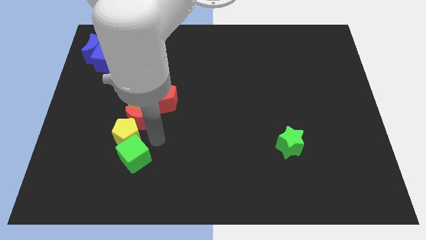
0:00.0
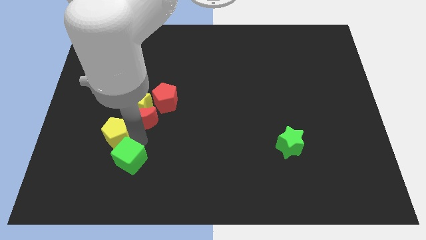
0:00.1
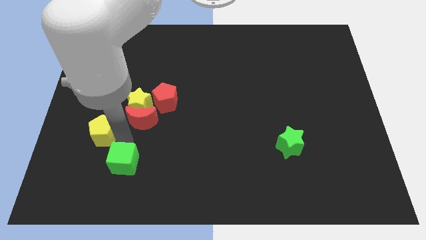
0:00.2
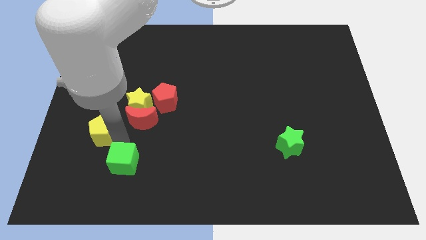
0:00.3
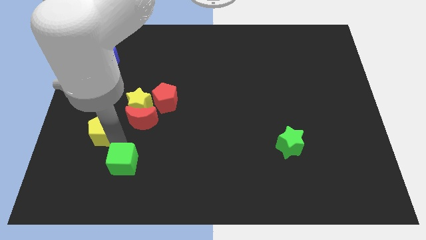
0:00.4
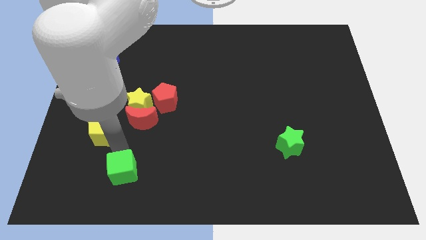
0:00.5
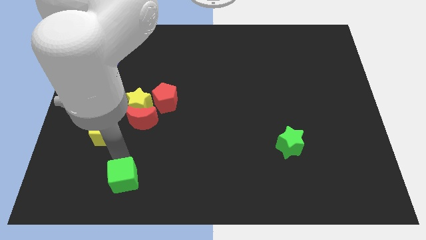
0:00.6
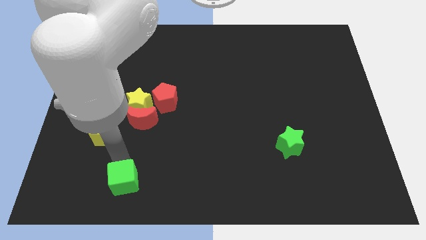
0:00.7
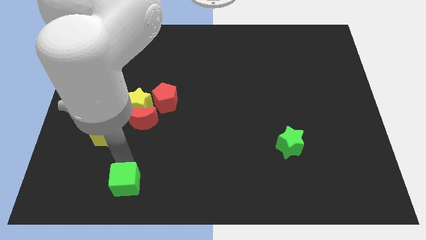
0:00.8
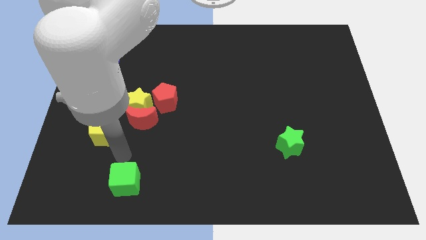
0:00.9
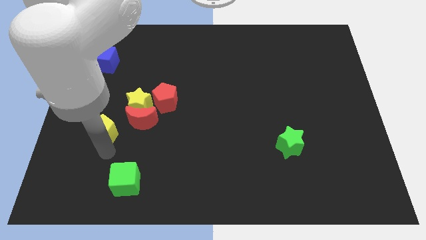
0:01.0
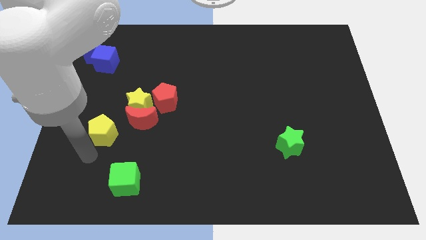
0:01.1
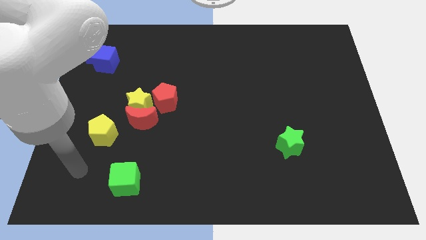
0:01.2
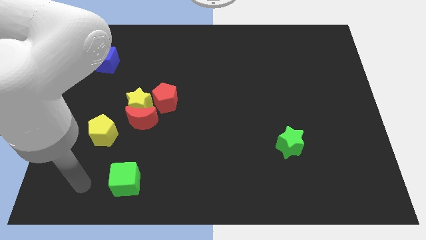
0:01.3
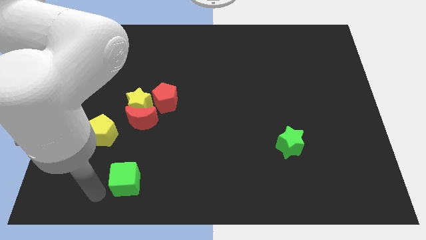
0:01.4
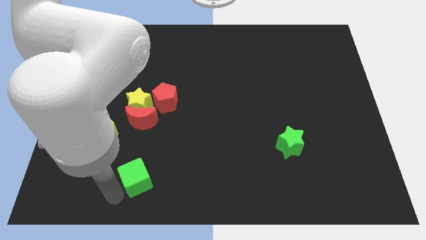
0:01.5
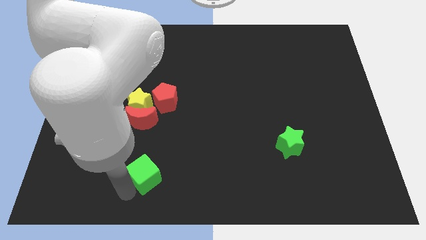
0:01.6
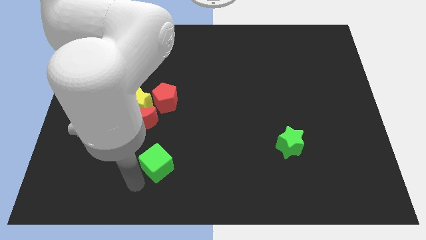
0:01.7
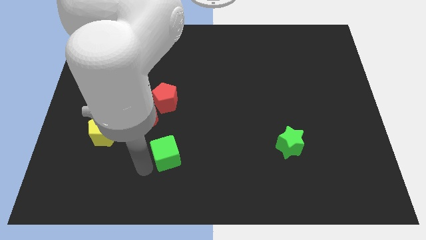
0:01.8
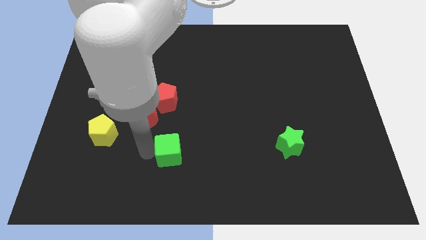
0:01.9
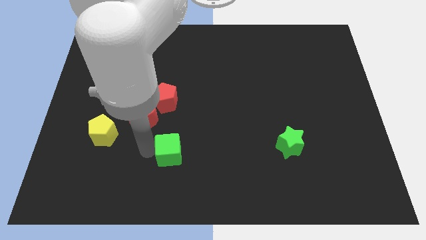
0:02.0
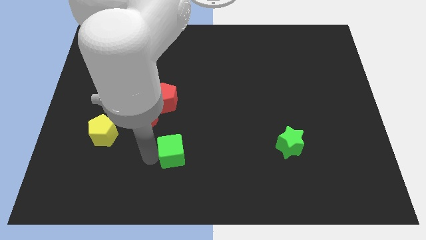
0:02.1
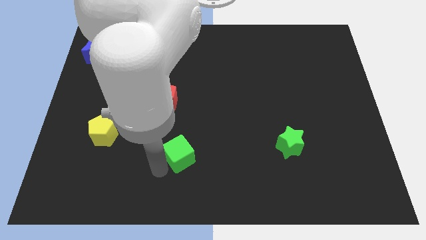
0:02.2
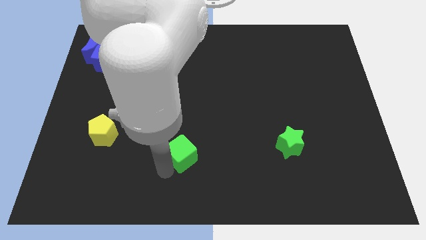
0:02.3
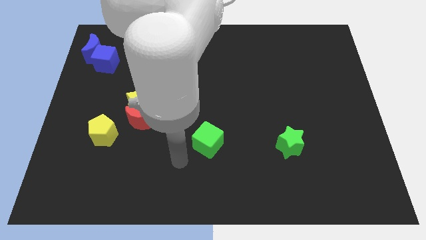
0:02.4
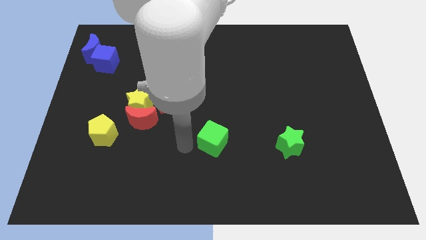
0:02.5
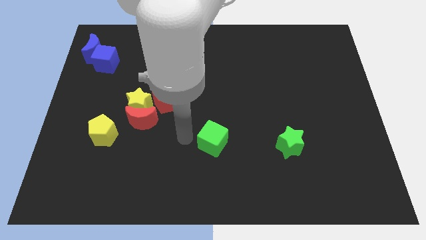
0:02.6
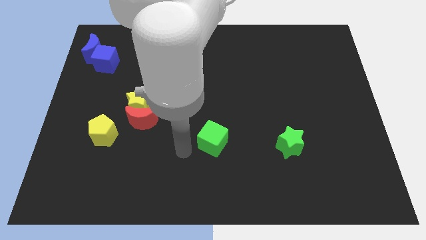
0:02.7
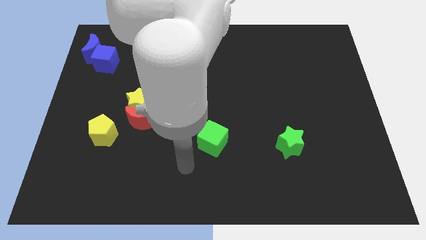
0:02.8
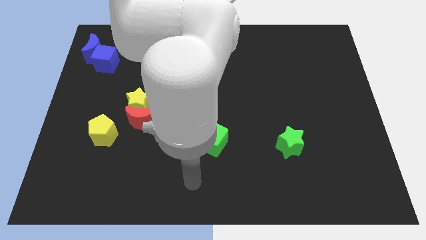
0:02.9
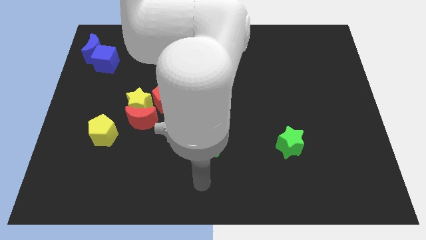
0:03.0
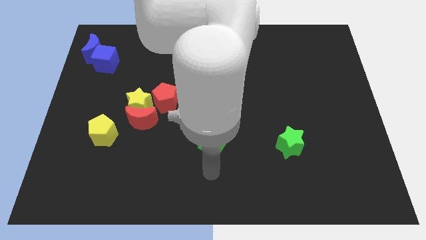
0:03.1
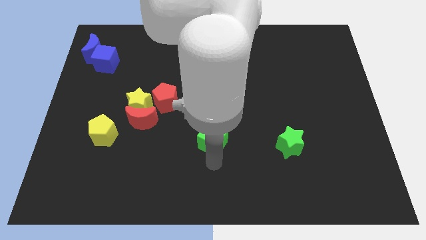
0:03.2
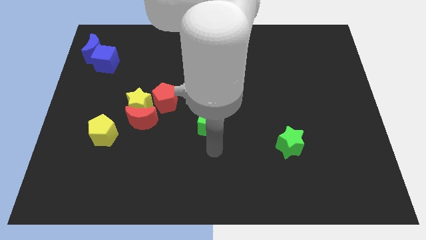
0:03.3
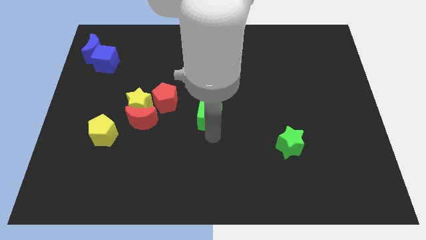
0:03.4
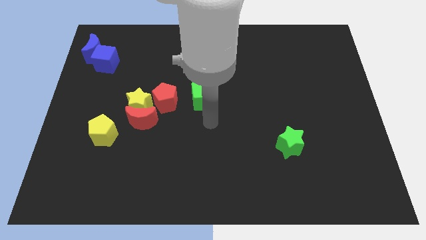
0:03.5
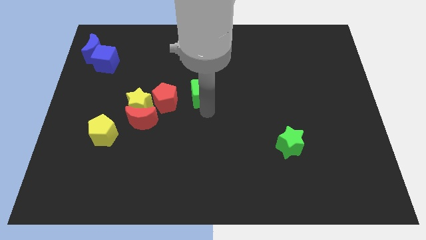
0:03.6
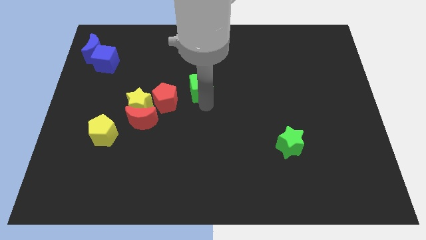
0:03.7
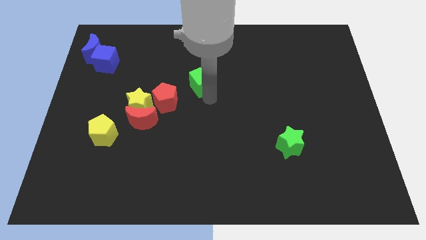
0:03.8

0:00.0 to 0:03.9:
place green cube at the center of the board

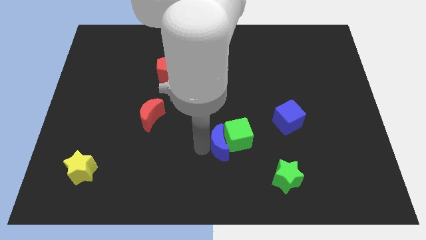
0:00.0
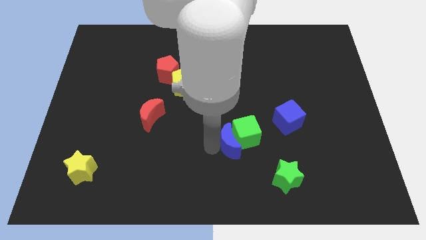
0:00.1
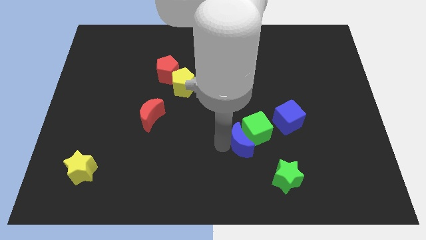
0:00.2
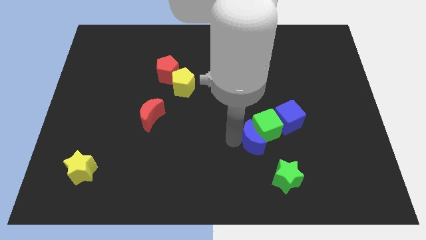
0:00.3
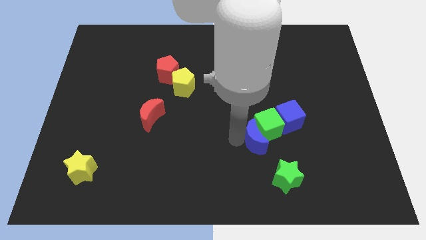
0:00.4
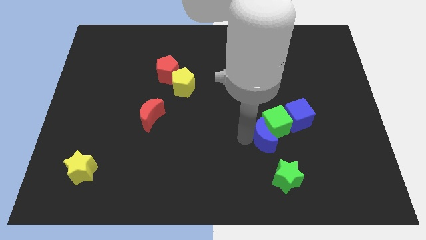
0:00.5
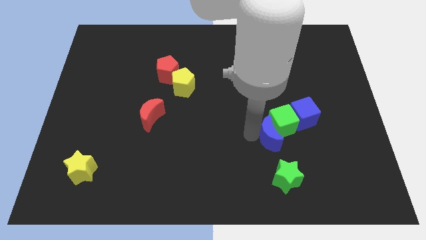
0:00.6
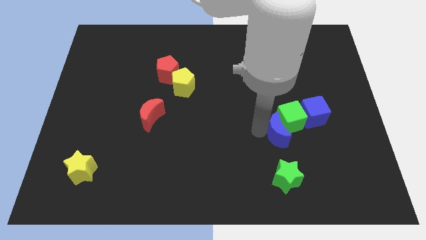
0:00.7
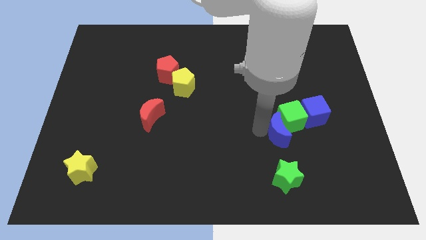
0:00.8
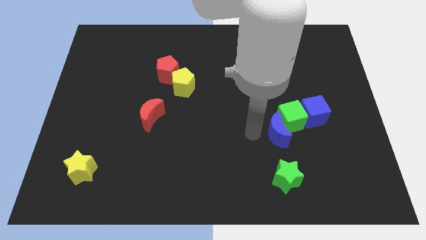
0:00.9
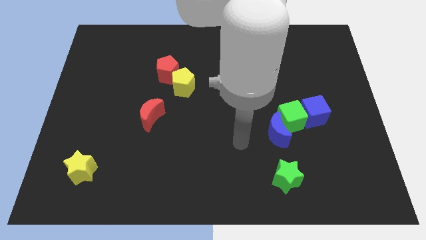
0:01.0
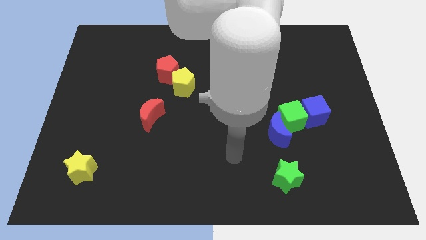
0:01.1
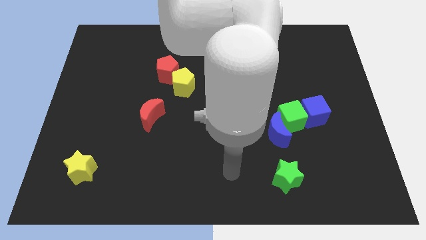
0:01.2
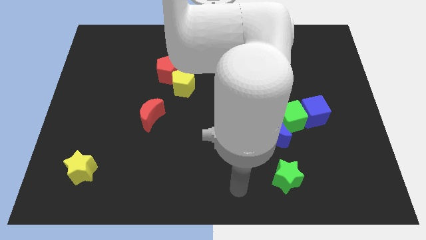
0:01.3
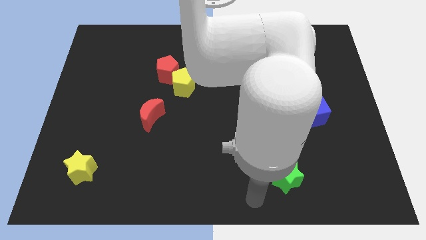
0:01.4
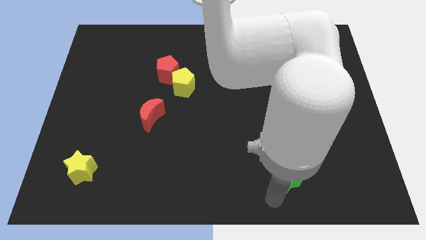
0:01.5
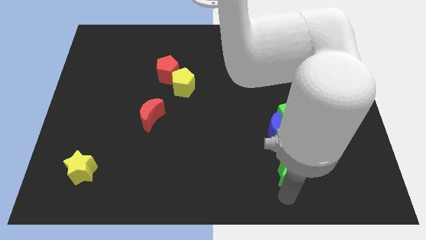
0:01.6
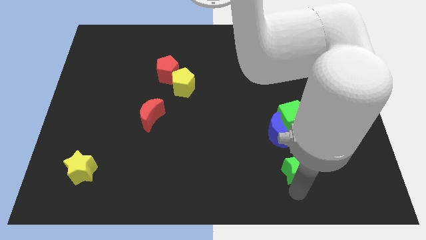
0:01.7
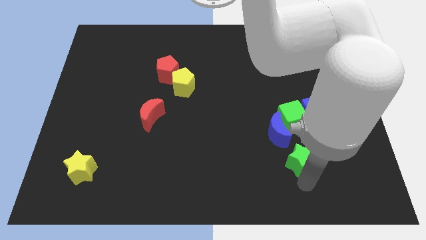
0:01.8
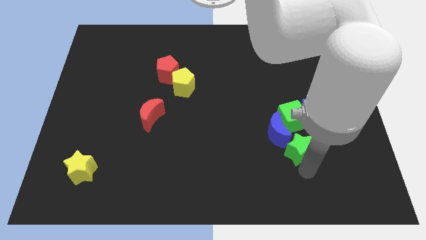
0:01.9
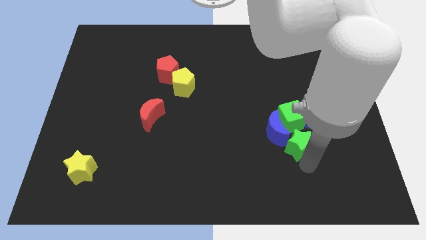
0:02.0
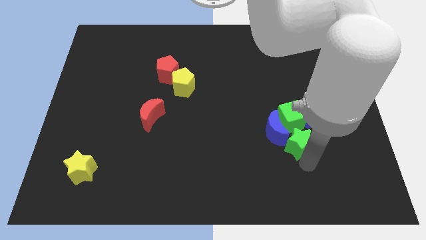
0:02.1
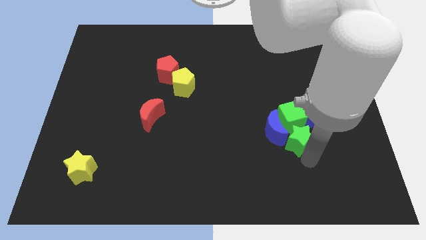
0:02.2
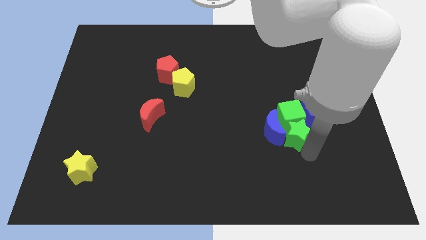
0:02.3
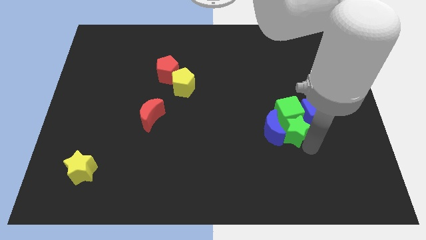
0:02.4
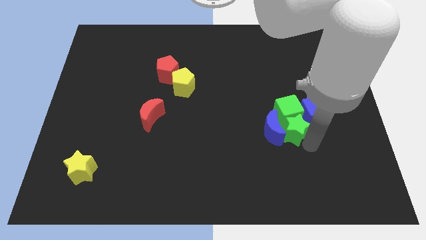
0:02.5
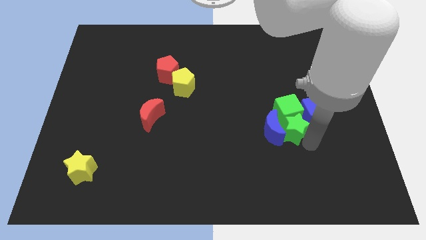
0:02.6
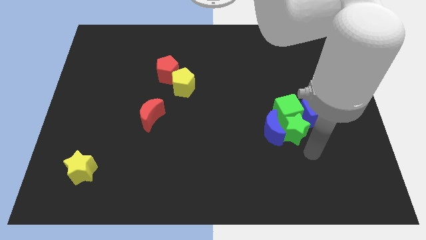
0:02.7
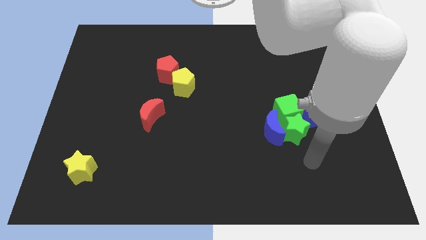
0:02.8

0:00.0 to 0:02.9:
push green star to the bottom of the green cube

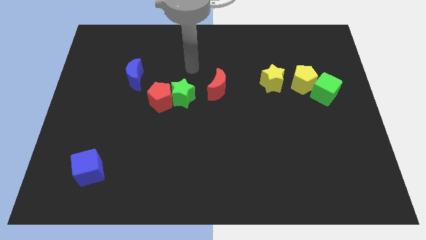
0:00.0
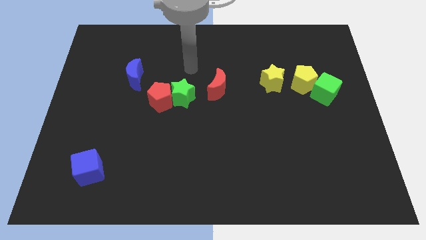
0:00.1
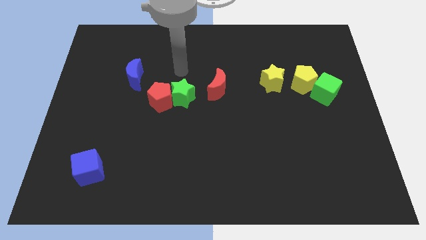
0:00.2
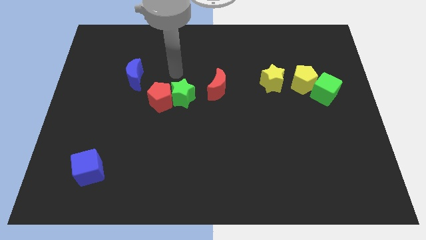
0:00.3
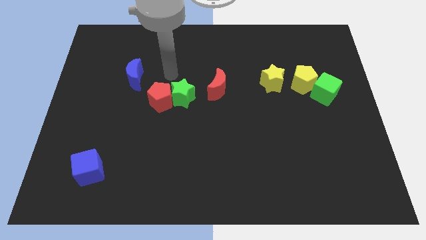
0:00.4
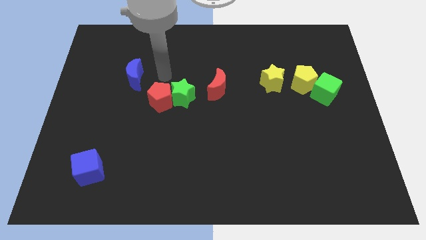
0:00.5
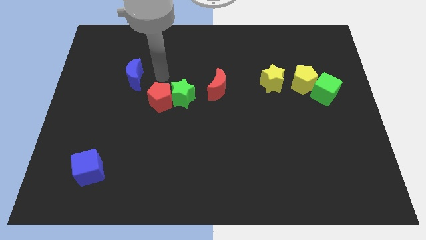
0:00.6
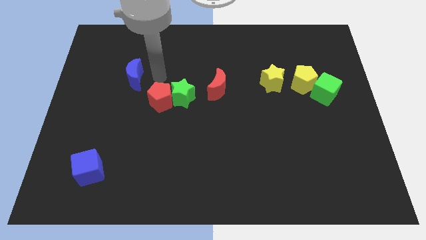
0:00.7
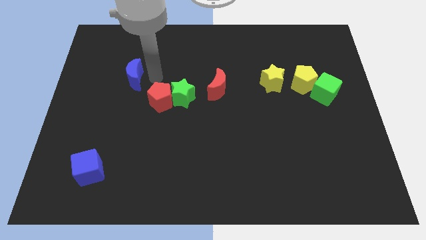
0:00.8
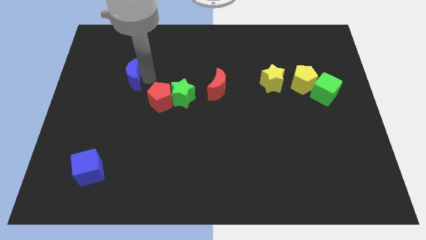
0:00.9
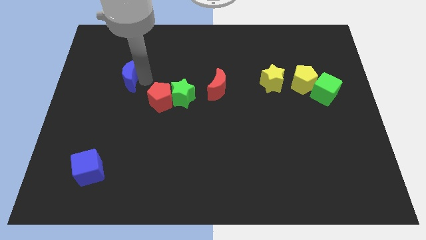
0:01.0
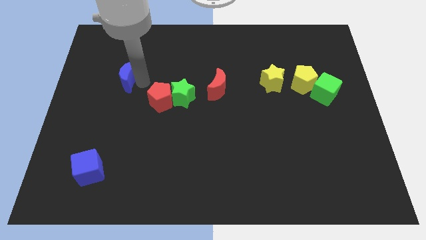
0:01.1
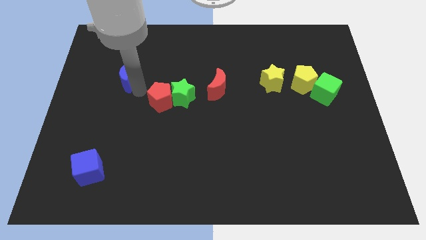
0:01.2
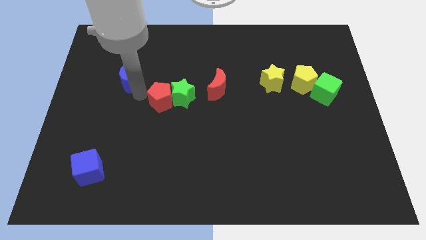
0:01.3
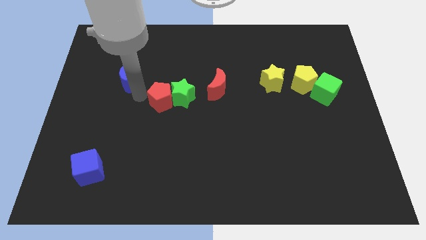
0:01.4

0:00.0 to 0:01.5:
slightly push the blue moon towards the left side of the board

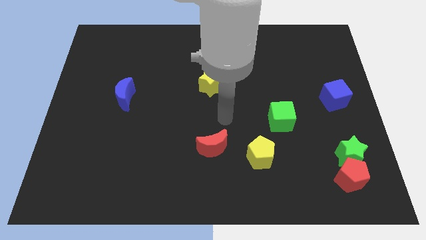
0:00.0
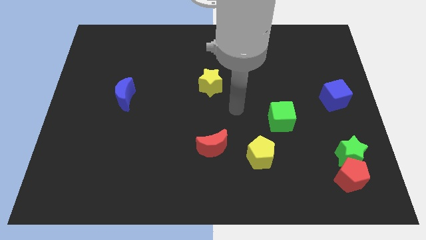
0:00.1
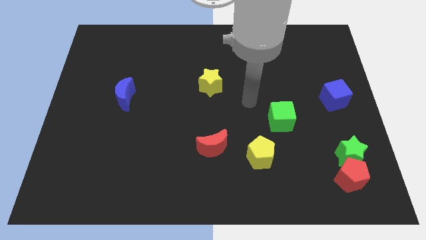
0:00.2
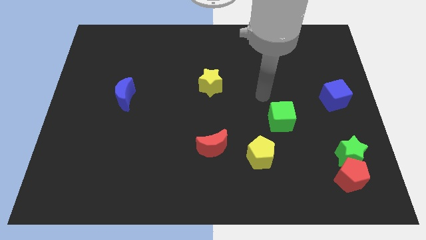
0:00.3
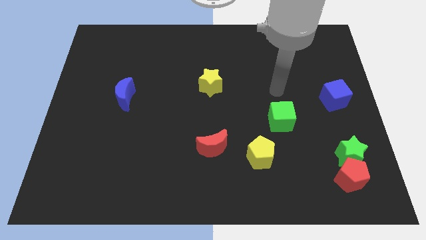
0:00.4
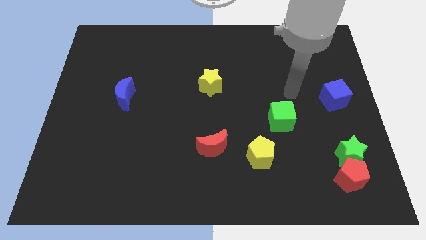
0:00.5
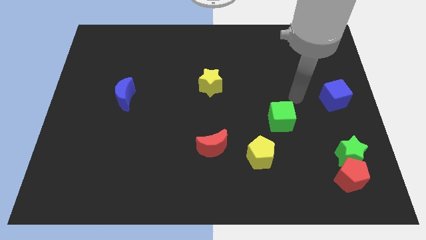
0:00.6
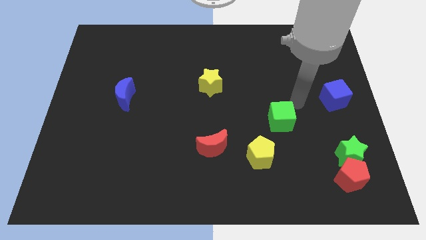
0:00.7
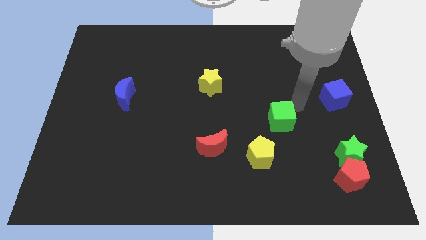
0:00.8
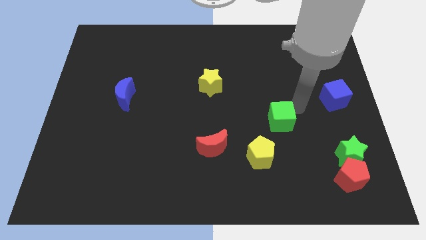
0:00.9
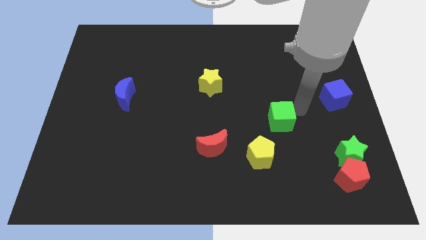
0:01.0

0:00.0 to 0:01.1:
slide your arm to the top right of green cube
